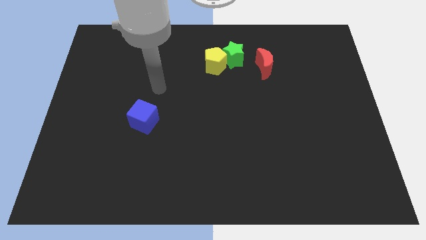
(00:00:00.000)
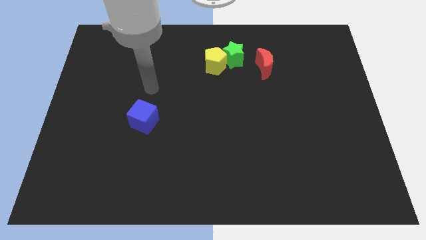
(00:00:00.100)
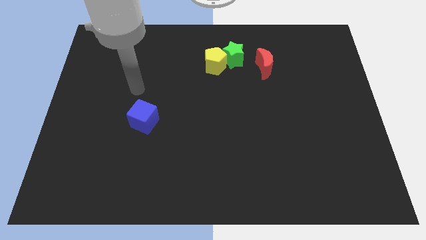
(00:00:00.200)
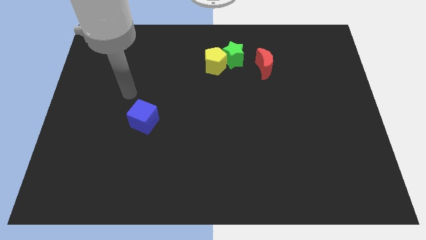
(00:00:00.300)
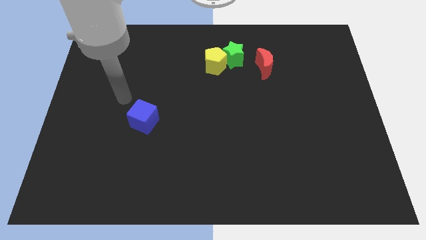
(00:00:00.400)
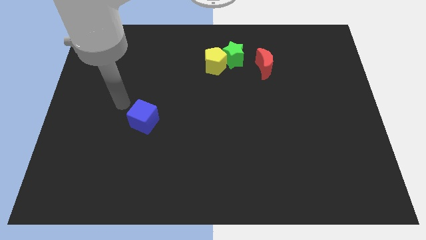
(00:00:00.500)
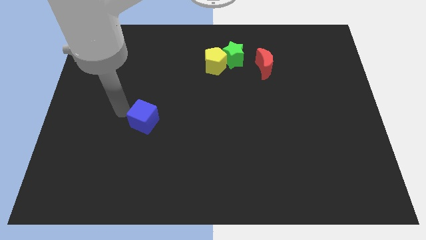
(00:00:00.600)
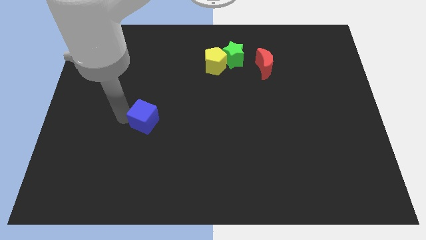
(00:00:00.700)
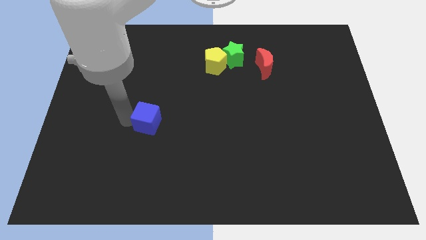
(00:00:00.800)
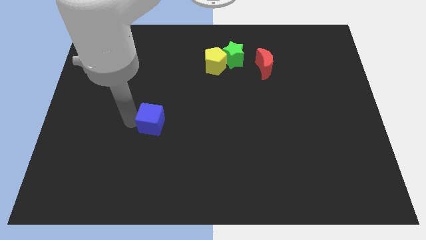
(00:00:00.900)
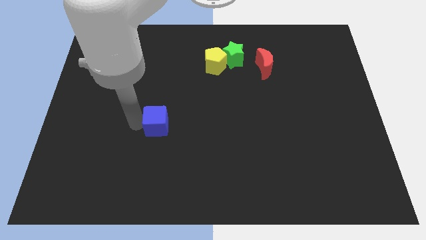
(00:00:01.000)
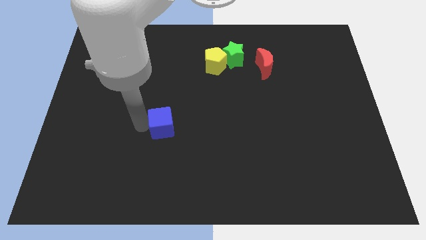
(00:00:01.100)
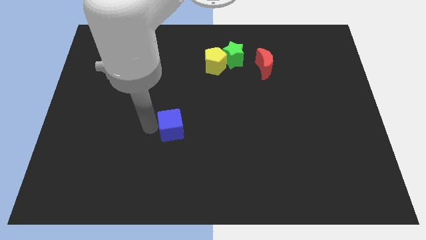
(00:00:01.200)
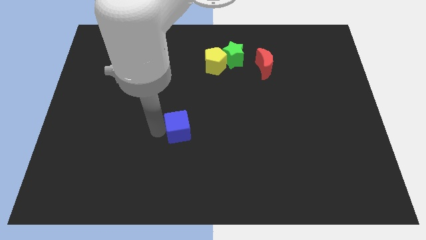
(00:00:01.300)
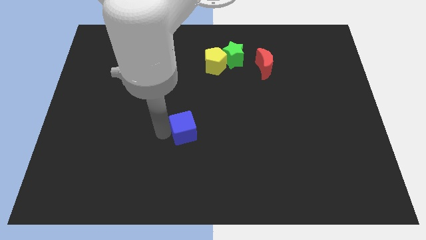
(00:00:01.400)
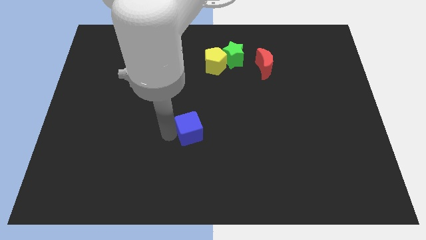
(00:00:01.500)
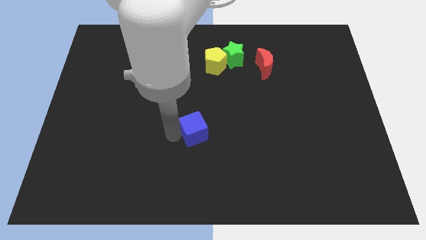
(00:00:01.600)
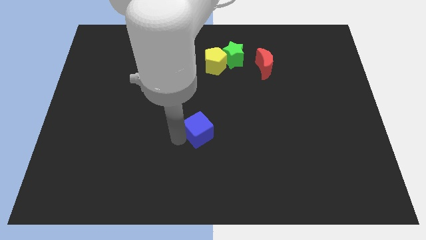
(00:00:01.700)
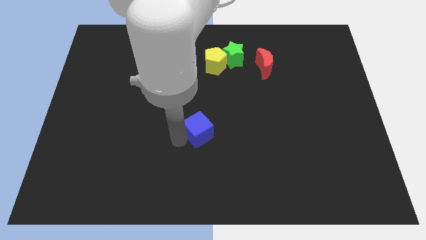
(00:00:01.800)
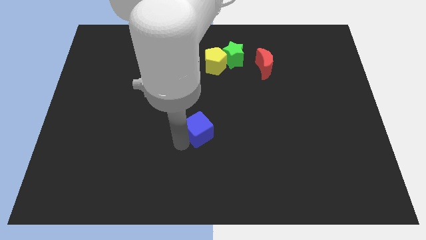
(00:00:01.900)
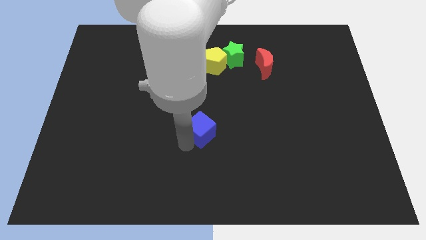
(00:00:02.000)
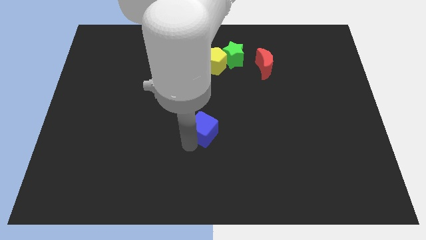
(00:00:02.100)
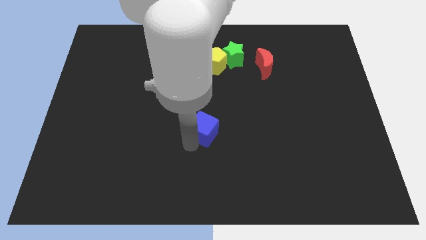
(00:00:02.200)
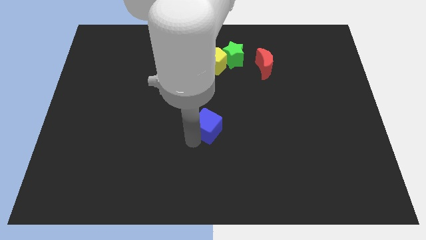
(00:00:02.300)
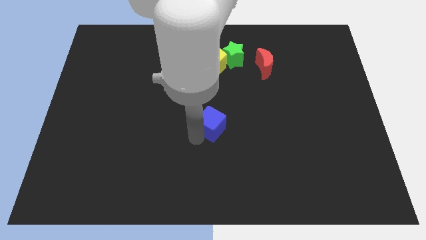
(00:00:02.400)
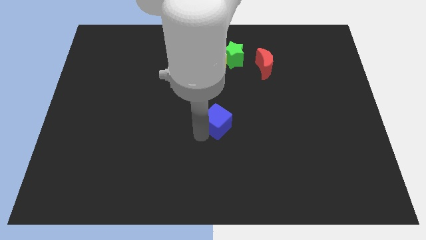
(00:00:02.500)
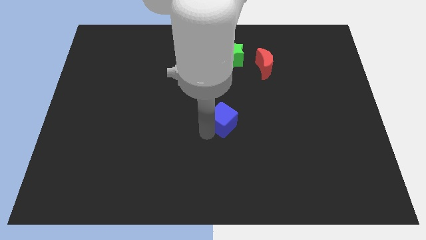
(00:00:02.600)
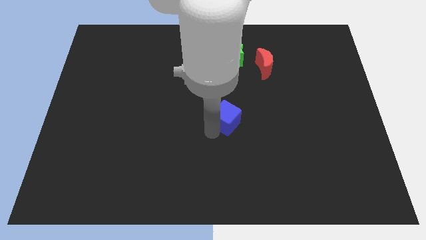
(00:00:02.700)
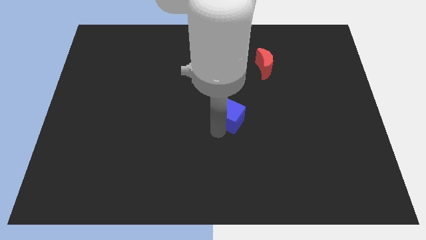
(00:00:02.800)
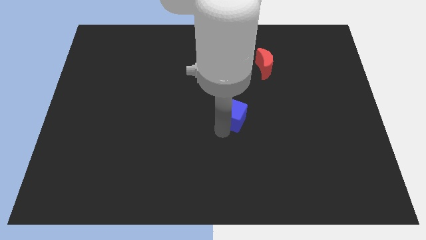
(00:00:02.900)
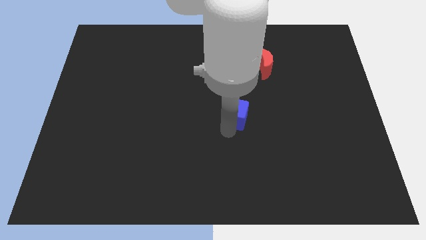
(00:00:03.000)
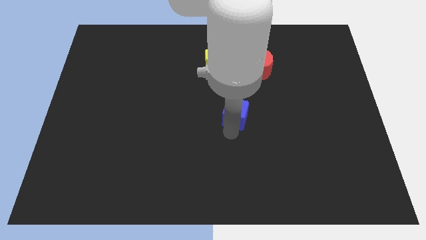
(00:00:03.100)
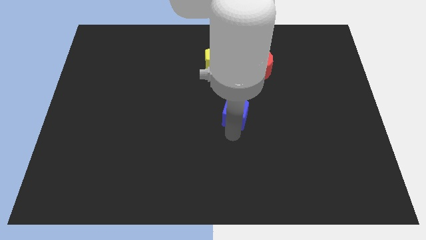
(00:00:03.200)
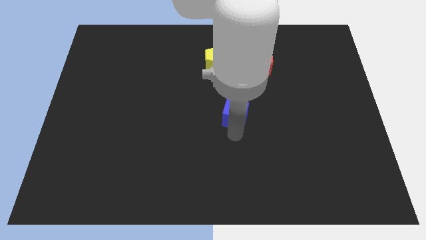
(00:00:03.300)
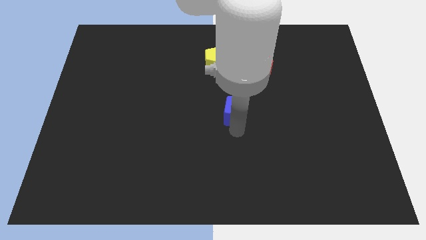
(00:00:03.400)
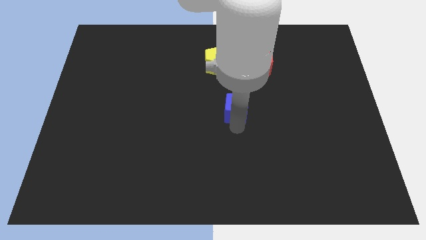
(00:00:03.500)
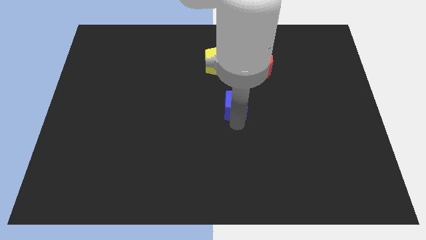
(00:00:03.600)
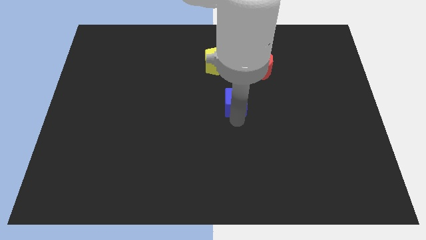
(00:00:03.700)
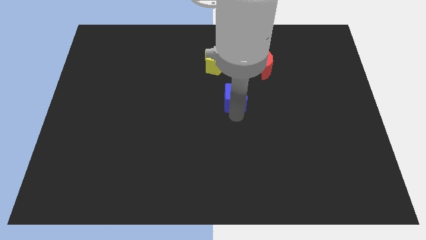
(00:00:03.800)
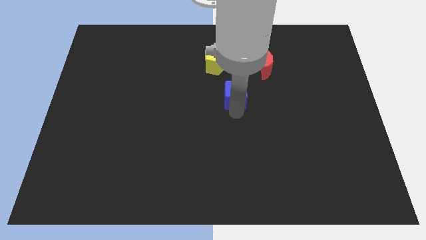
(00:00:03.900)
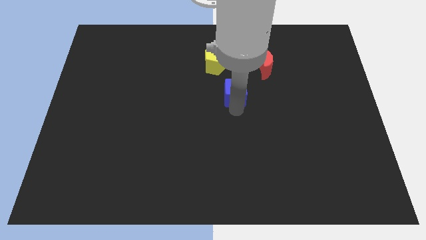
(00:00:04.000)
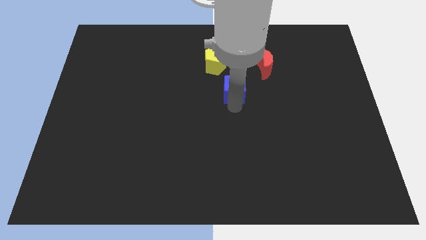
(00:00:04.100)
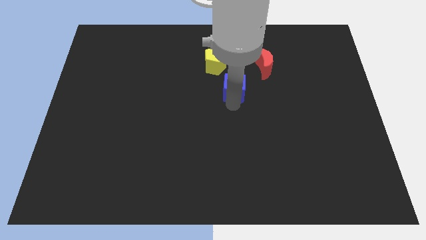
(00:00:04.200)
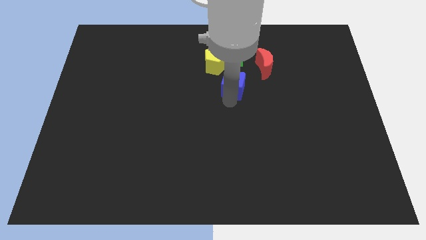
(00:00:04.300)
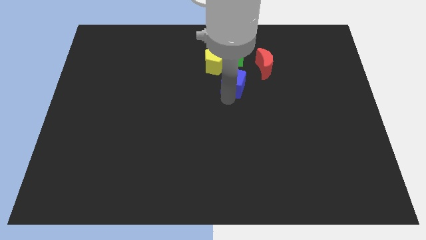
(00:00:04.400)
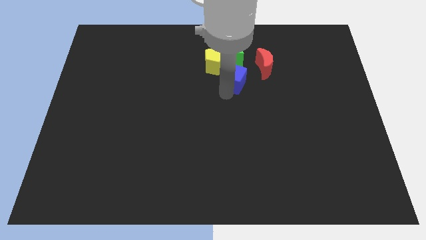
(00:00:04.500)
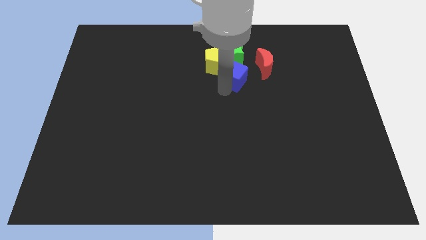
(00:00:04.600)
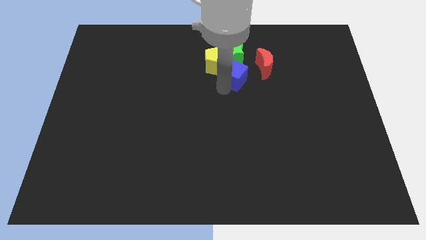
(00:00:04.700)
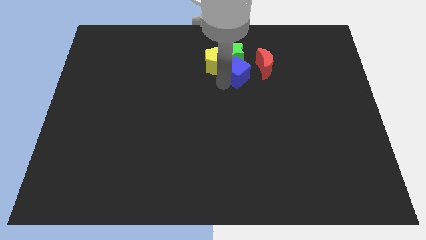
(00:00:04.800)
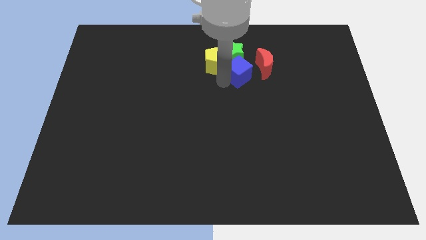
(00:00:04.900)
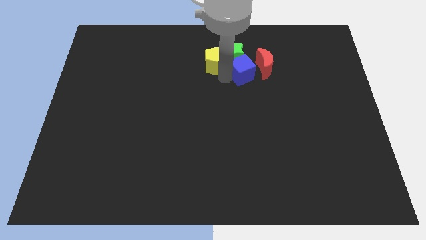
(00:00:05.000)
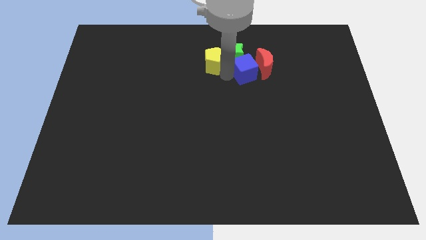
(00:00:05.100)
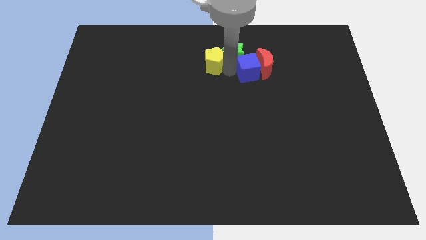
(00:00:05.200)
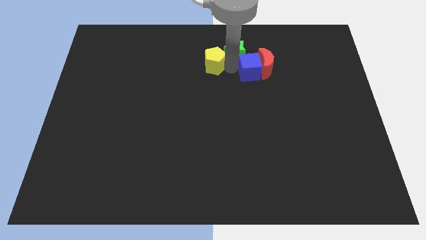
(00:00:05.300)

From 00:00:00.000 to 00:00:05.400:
push the blue block next to the red moon

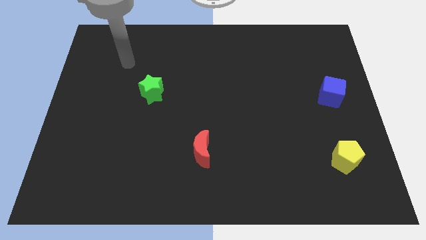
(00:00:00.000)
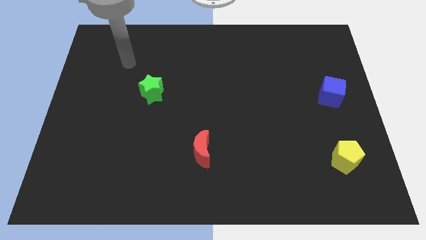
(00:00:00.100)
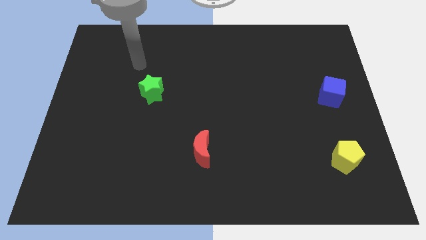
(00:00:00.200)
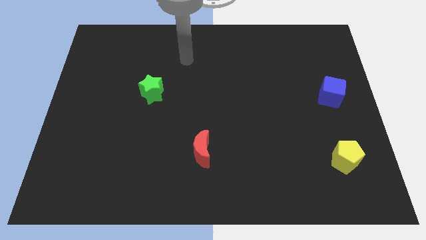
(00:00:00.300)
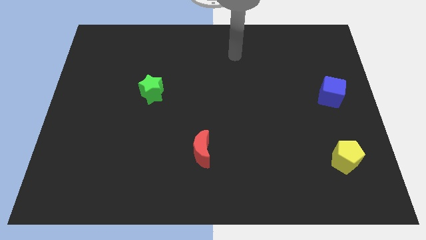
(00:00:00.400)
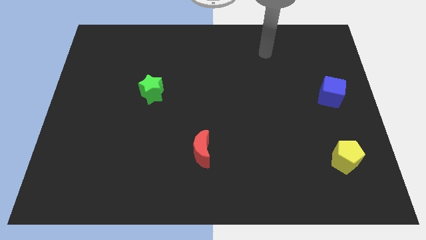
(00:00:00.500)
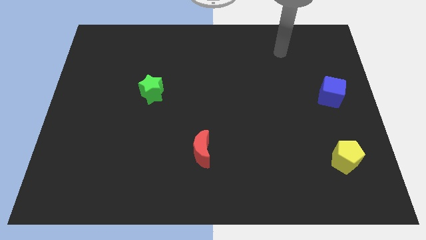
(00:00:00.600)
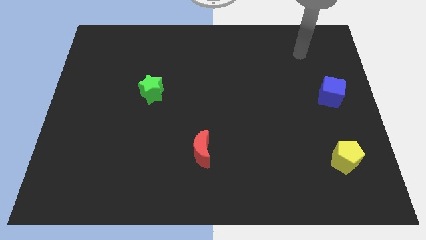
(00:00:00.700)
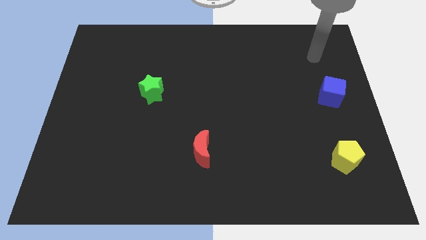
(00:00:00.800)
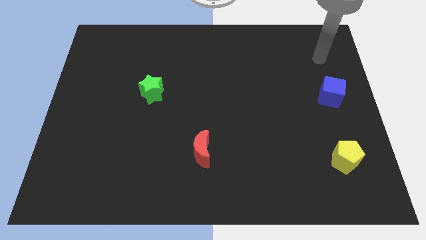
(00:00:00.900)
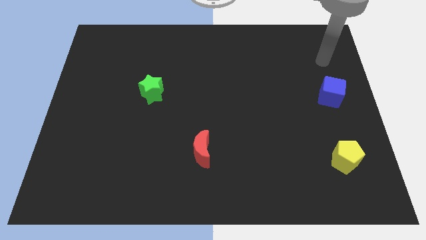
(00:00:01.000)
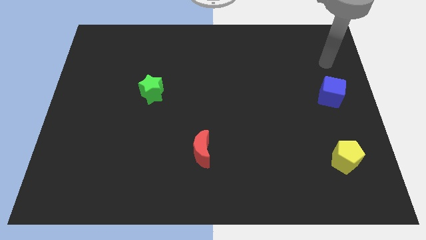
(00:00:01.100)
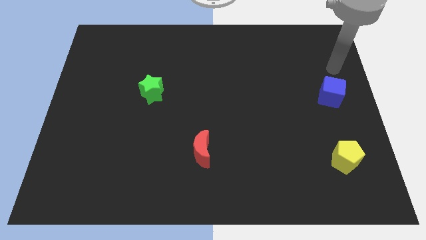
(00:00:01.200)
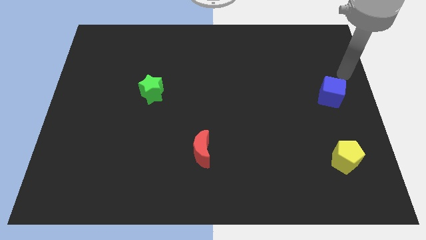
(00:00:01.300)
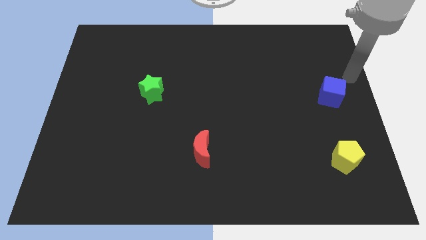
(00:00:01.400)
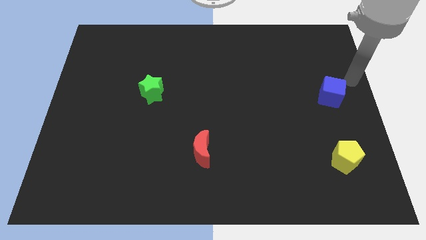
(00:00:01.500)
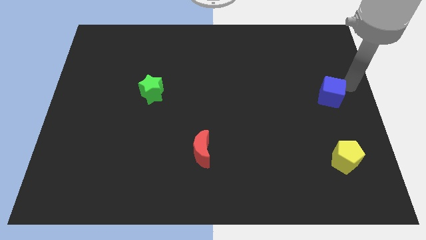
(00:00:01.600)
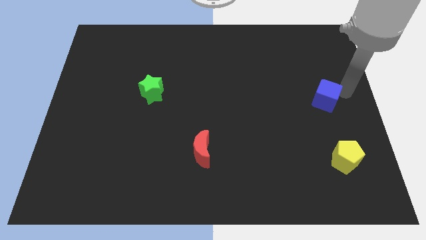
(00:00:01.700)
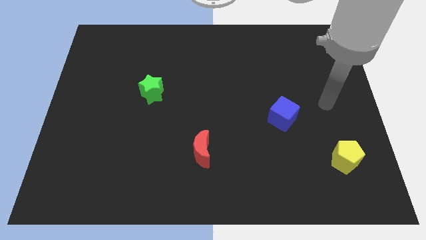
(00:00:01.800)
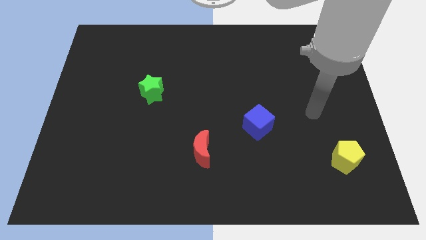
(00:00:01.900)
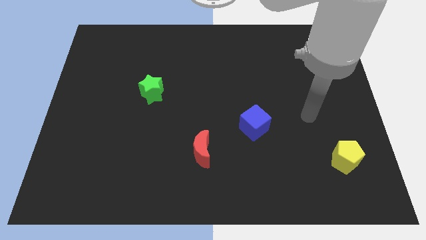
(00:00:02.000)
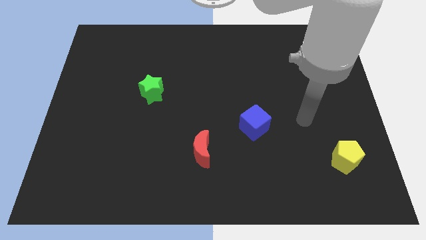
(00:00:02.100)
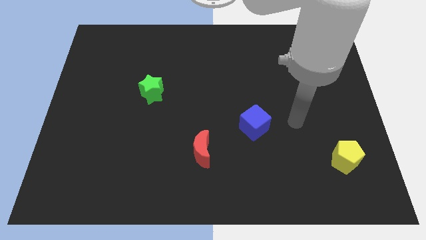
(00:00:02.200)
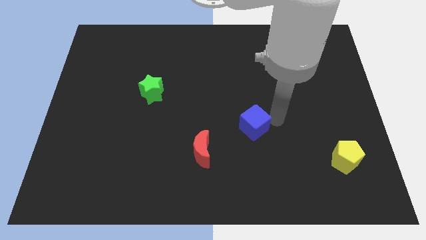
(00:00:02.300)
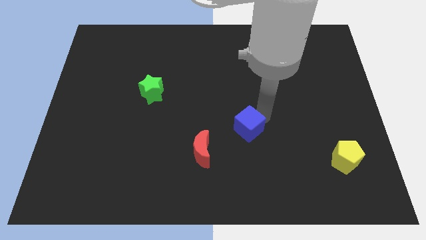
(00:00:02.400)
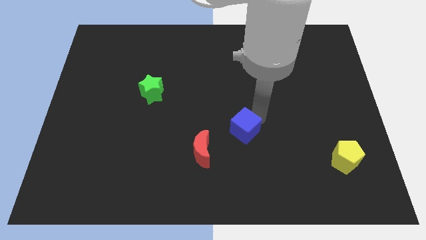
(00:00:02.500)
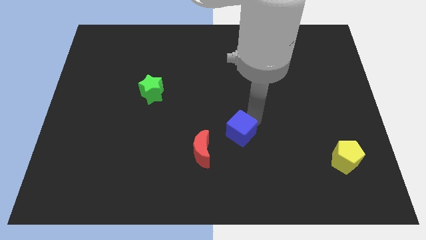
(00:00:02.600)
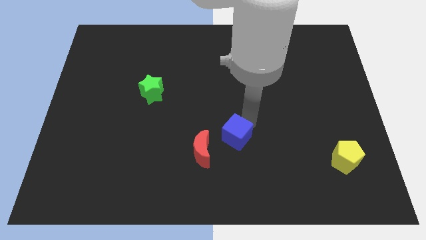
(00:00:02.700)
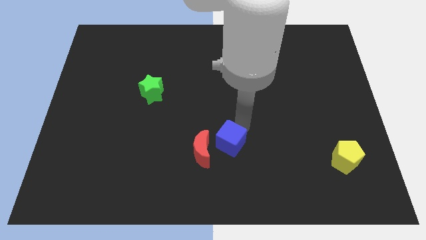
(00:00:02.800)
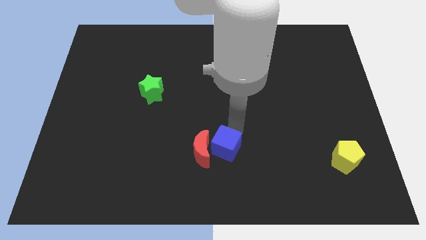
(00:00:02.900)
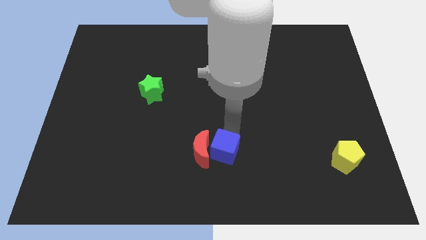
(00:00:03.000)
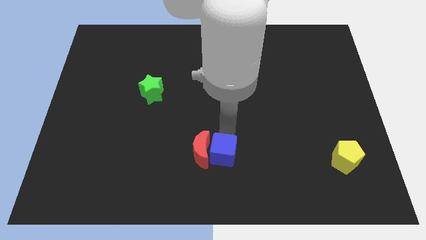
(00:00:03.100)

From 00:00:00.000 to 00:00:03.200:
put the blue cube to the red block

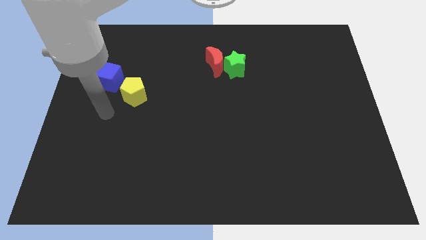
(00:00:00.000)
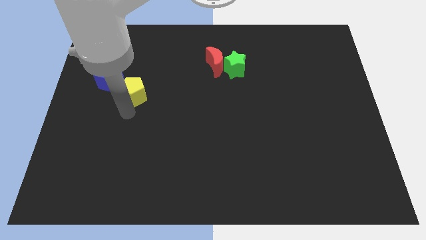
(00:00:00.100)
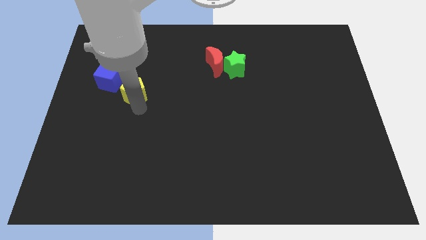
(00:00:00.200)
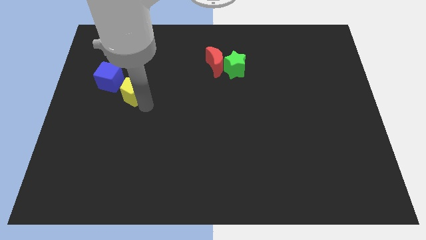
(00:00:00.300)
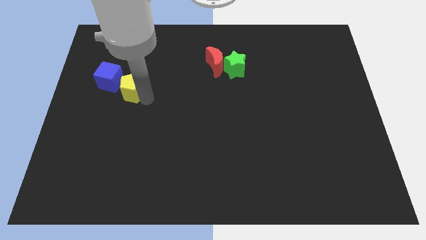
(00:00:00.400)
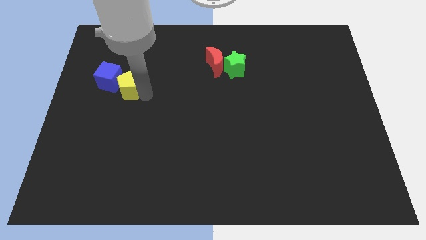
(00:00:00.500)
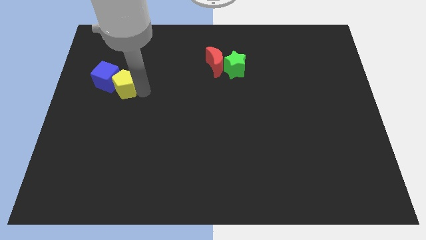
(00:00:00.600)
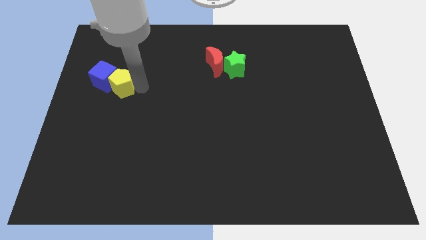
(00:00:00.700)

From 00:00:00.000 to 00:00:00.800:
push the pentagon next to the blue cube
